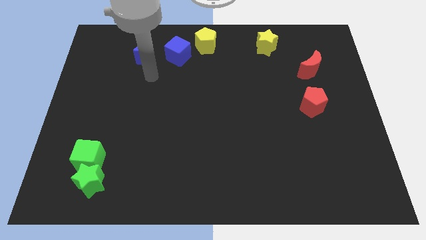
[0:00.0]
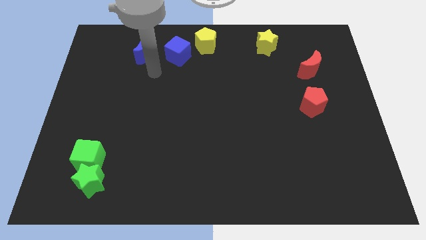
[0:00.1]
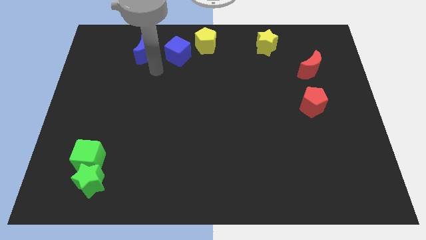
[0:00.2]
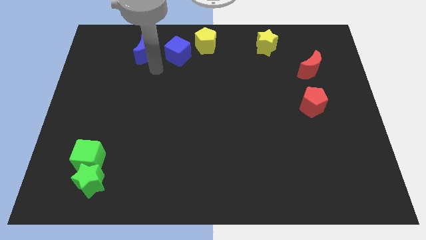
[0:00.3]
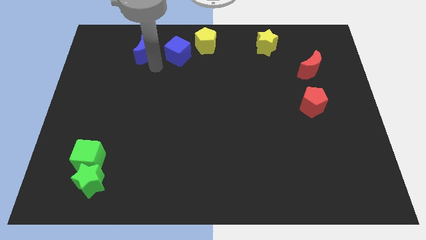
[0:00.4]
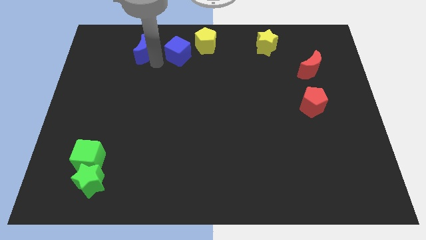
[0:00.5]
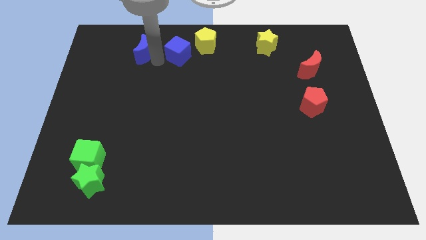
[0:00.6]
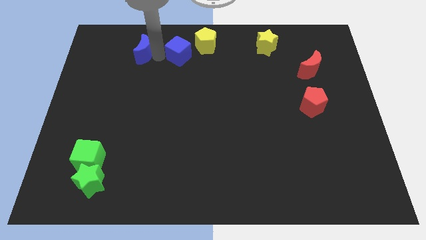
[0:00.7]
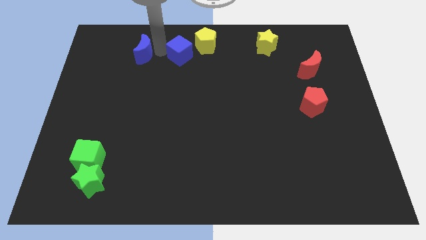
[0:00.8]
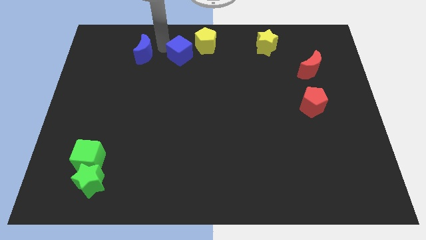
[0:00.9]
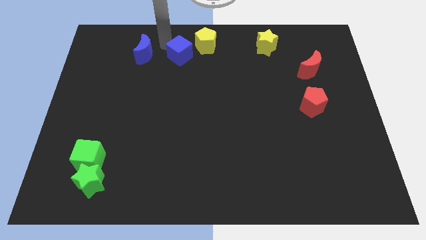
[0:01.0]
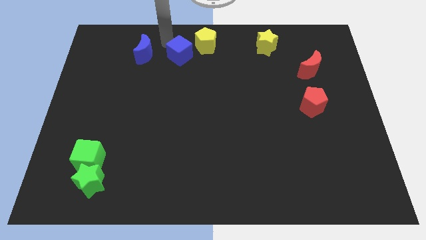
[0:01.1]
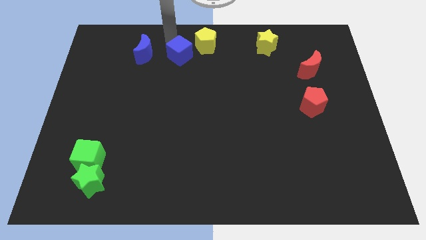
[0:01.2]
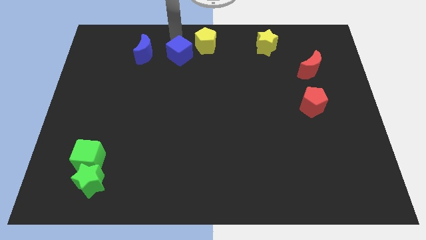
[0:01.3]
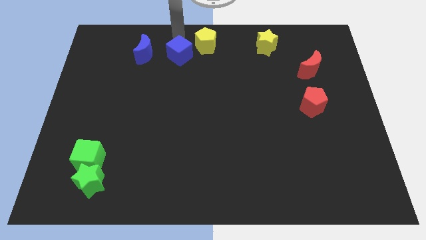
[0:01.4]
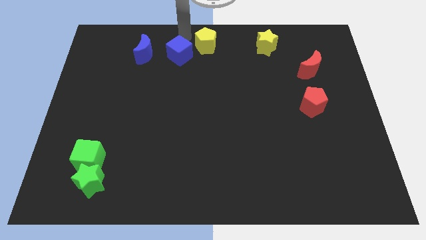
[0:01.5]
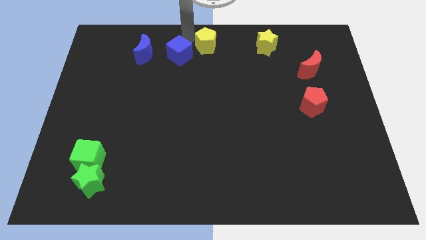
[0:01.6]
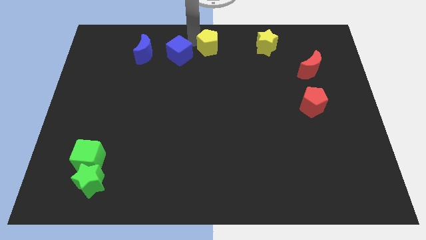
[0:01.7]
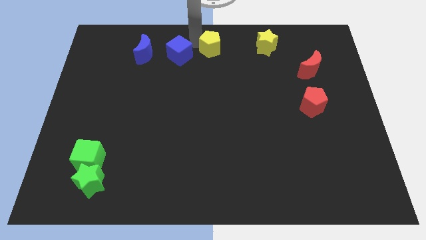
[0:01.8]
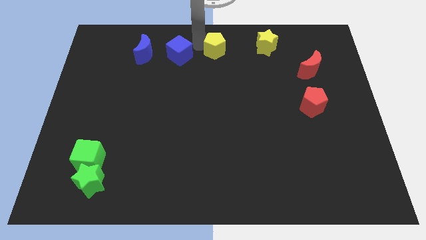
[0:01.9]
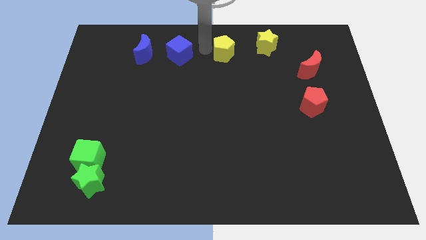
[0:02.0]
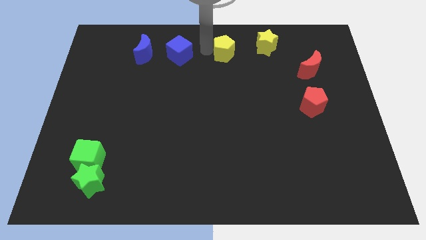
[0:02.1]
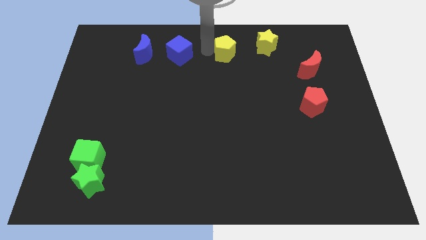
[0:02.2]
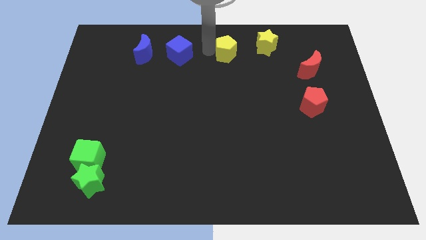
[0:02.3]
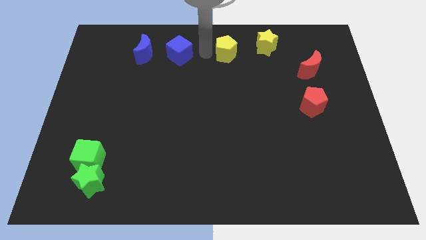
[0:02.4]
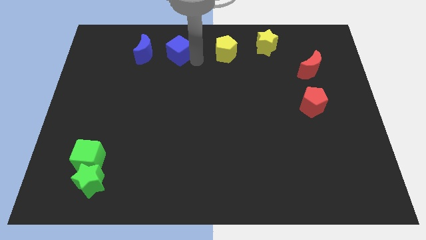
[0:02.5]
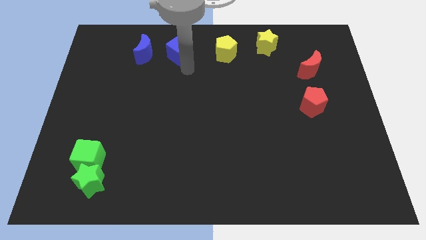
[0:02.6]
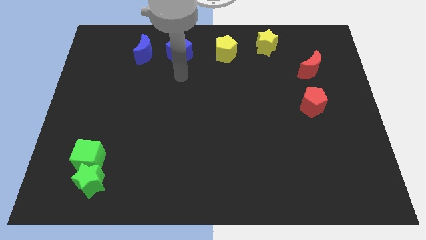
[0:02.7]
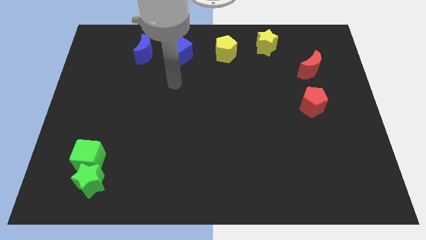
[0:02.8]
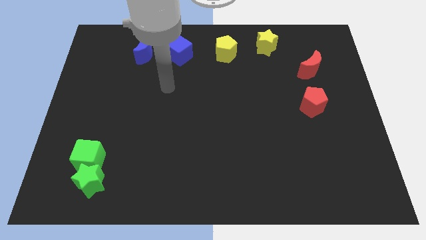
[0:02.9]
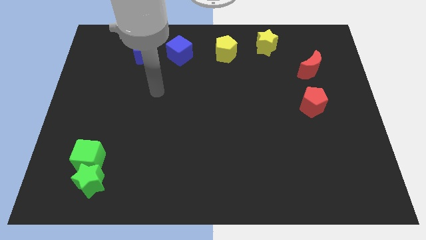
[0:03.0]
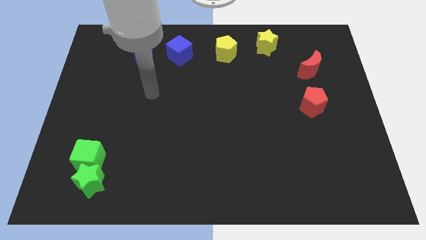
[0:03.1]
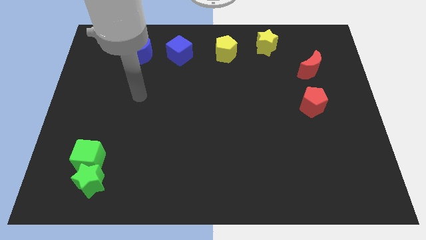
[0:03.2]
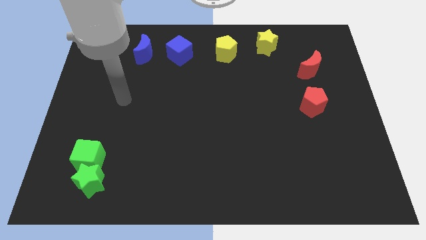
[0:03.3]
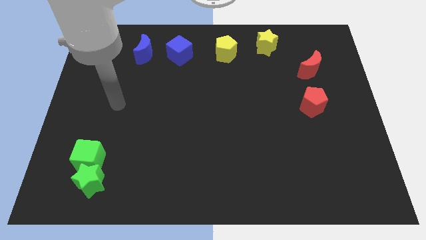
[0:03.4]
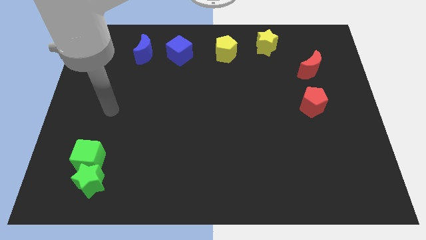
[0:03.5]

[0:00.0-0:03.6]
place the yellow pentagon to the right of the blue cube

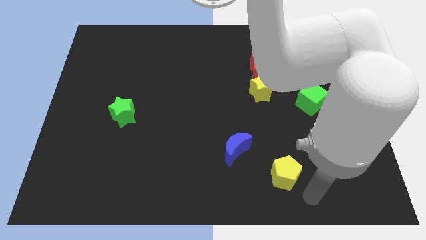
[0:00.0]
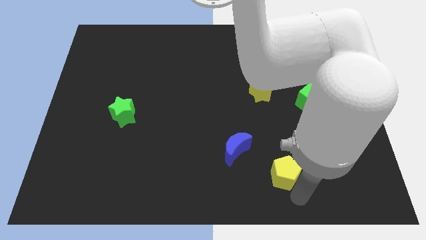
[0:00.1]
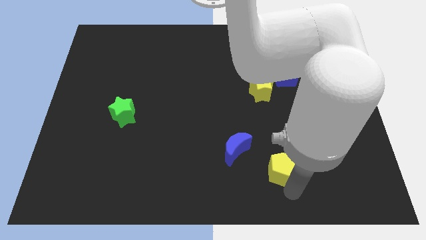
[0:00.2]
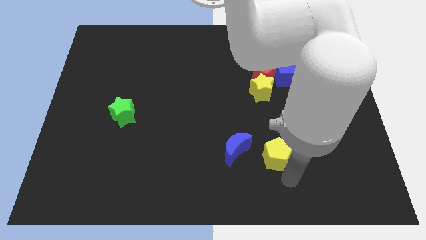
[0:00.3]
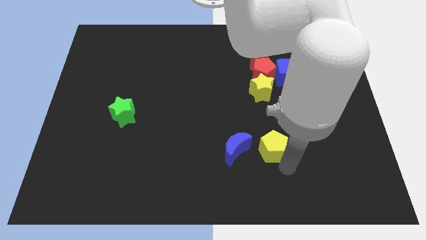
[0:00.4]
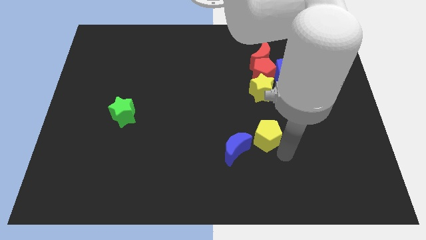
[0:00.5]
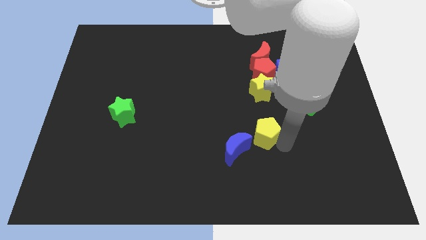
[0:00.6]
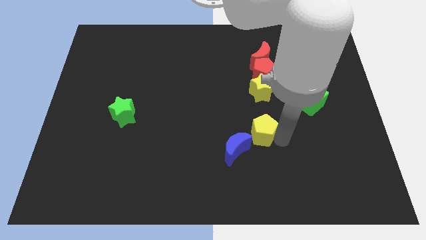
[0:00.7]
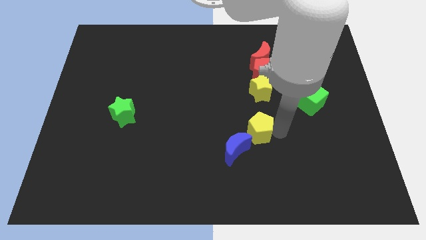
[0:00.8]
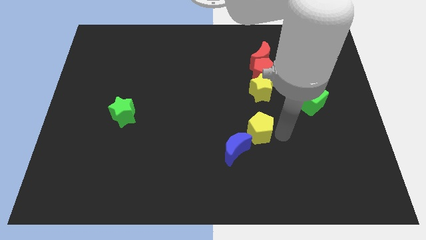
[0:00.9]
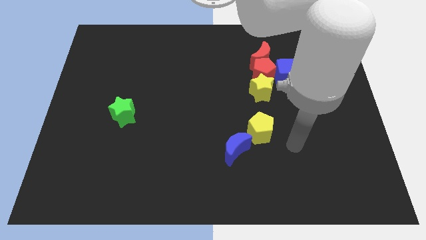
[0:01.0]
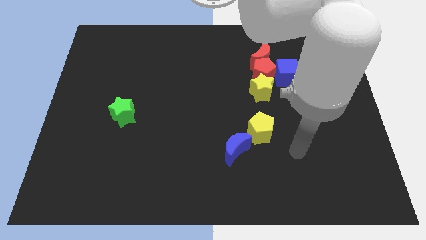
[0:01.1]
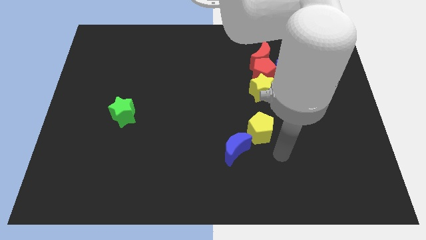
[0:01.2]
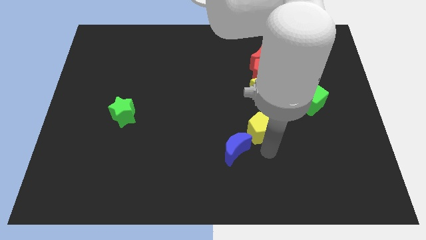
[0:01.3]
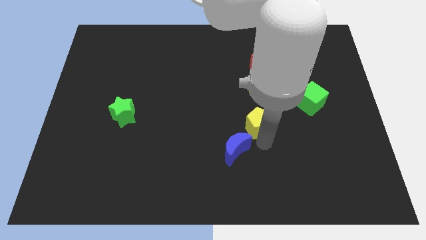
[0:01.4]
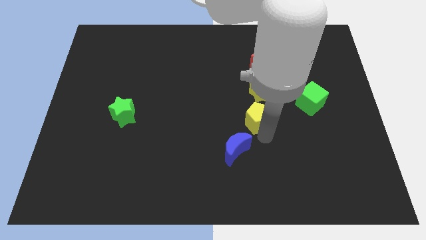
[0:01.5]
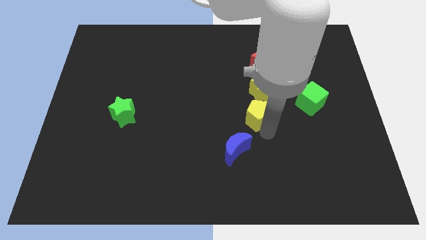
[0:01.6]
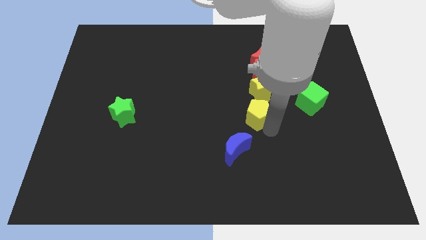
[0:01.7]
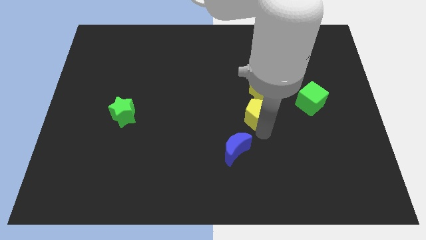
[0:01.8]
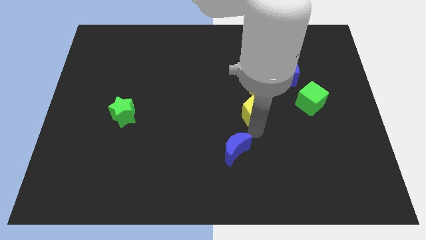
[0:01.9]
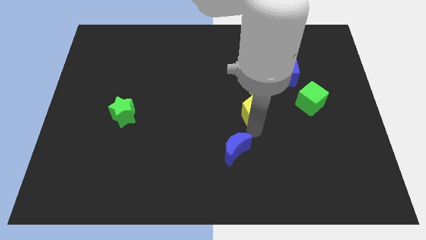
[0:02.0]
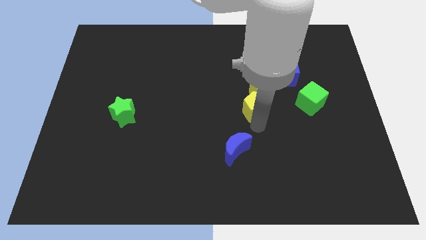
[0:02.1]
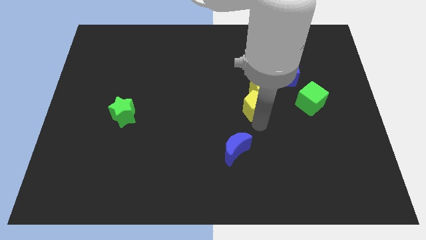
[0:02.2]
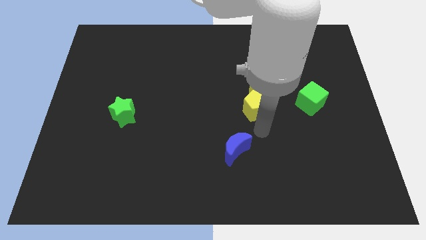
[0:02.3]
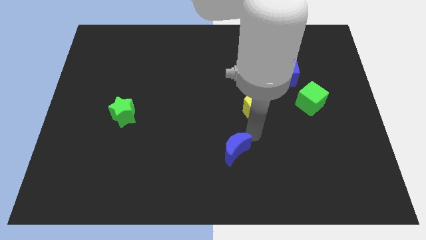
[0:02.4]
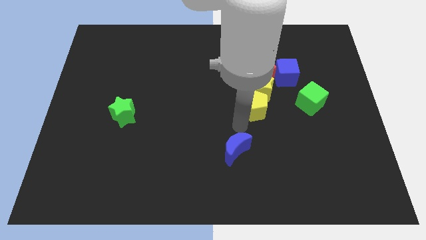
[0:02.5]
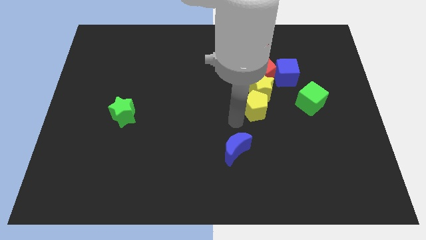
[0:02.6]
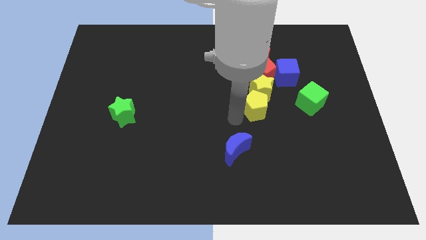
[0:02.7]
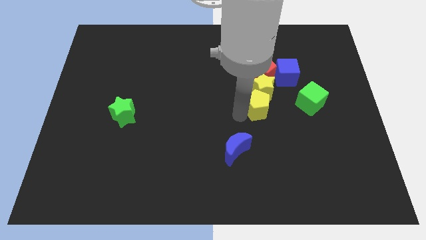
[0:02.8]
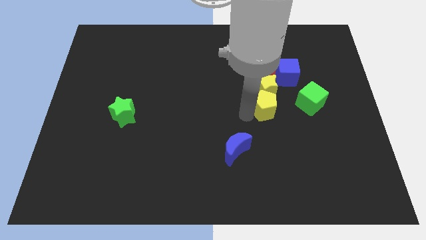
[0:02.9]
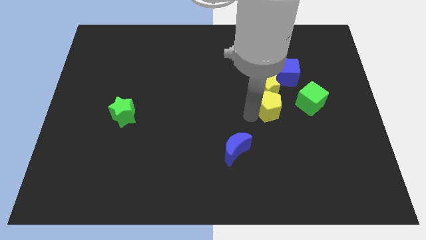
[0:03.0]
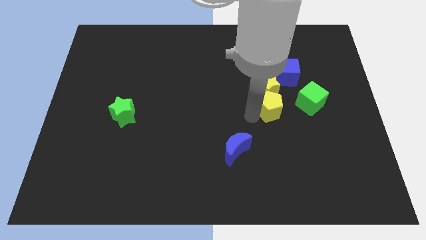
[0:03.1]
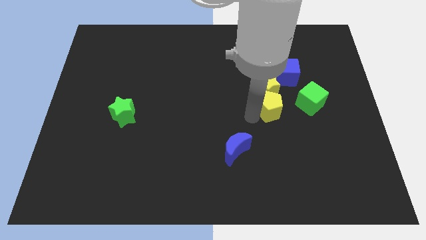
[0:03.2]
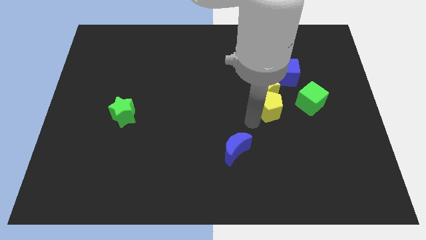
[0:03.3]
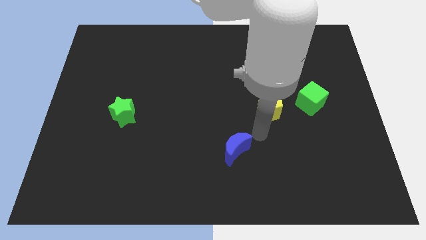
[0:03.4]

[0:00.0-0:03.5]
place the yellow pentagon into bottom of yellow star

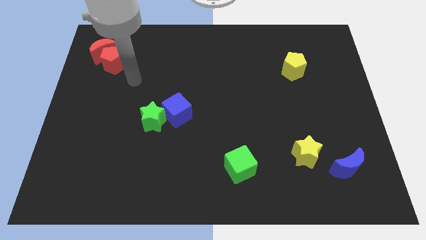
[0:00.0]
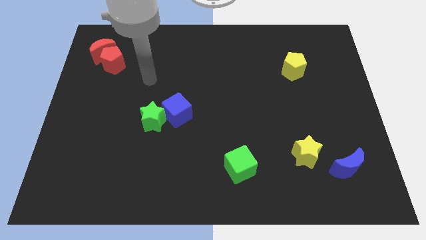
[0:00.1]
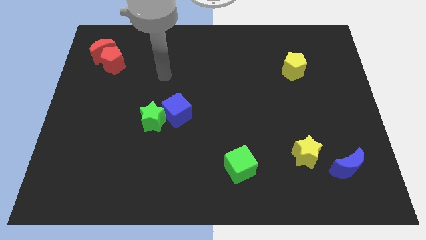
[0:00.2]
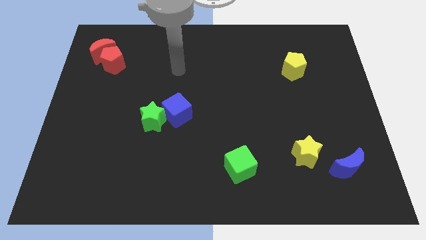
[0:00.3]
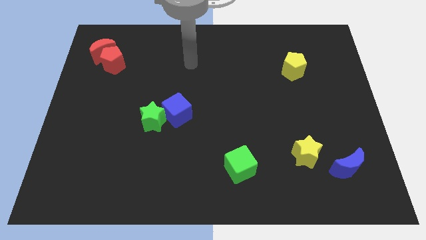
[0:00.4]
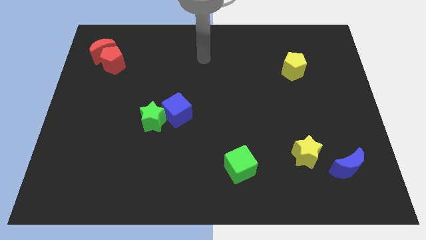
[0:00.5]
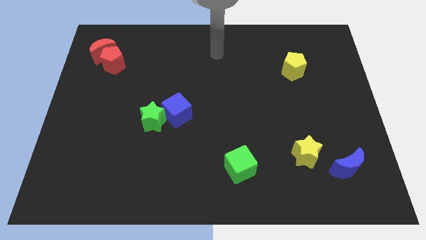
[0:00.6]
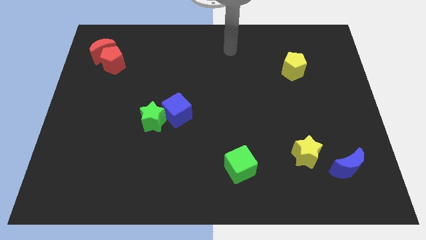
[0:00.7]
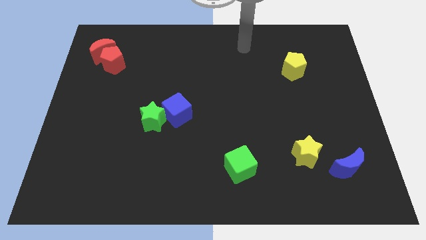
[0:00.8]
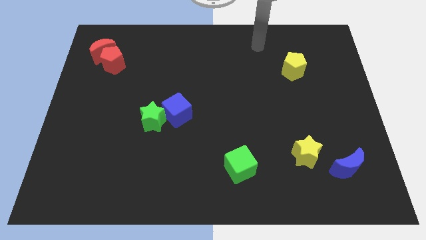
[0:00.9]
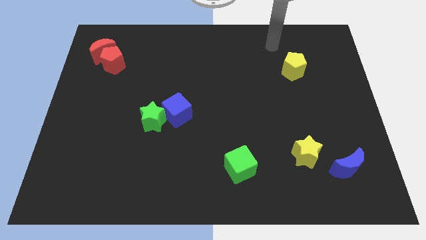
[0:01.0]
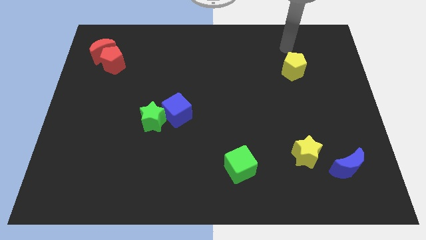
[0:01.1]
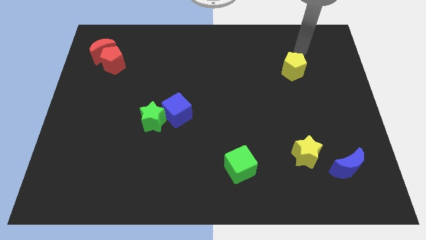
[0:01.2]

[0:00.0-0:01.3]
place your hand above the yellow pentagon

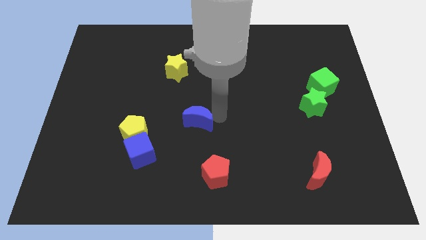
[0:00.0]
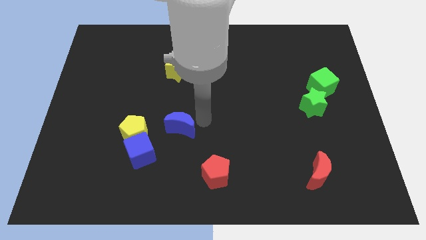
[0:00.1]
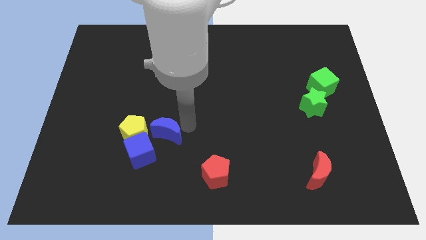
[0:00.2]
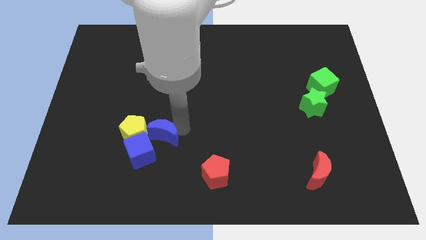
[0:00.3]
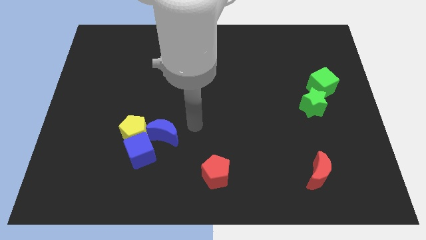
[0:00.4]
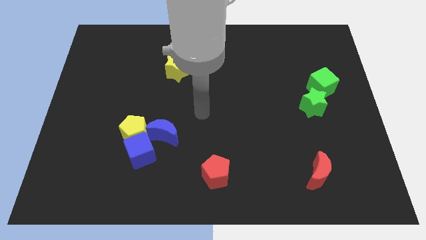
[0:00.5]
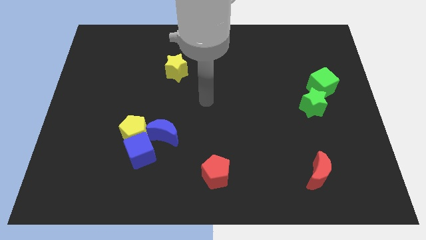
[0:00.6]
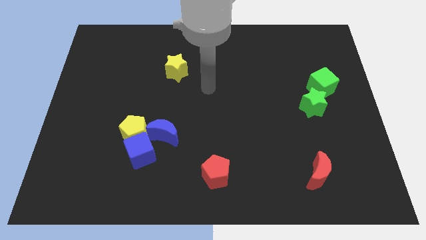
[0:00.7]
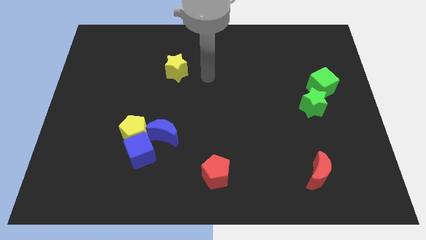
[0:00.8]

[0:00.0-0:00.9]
push the blue crescent to the right of the yellow pentagon
